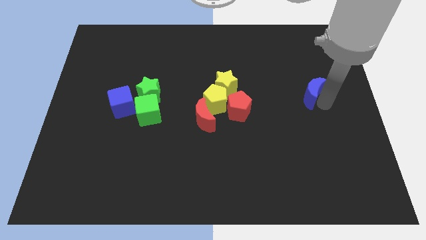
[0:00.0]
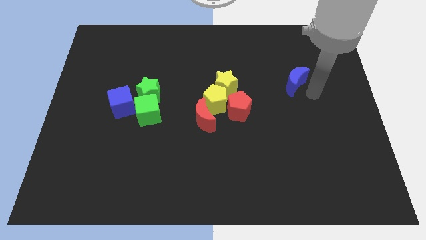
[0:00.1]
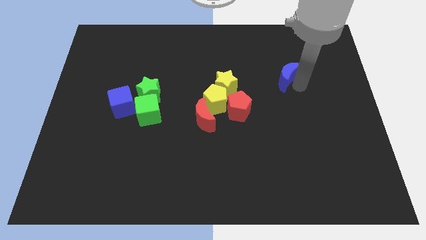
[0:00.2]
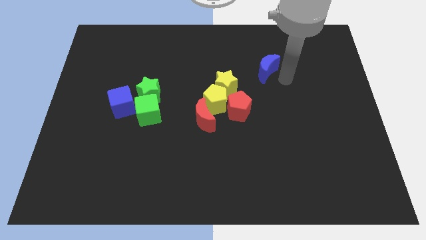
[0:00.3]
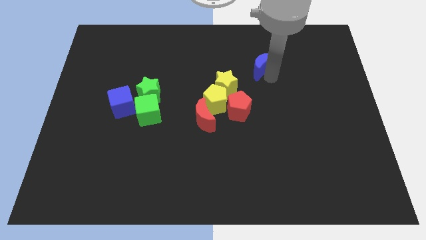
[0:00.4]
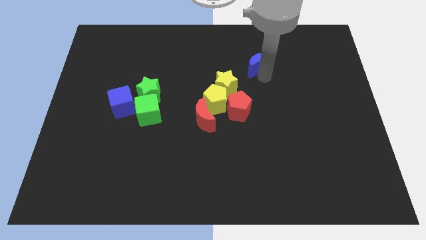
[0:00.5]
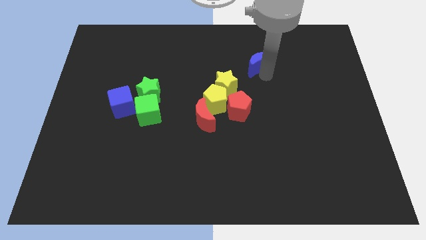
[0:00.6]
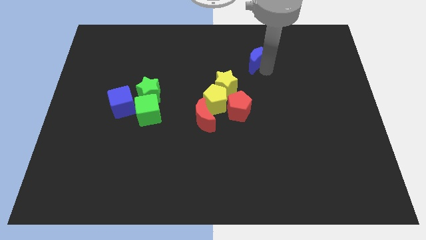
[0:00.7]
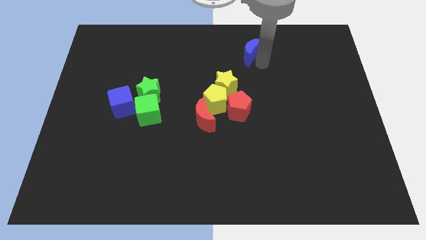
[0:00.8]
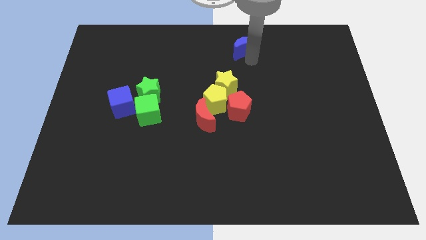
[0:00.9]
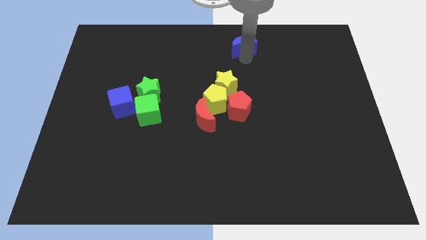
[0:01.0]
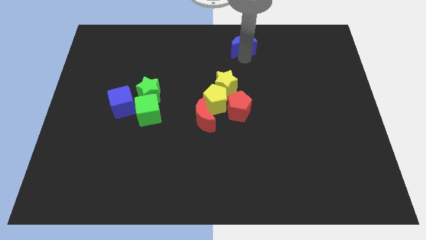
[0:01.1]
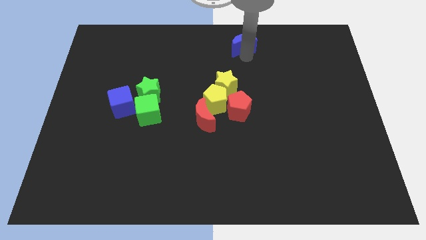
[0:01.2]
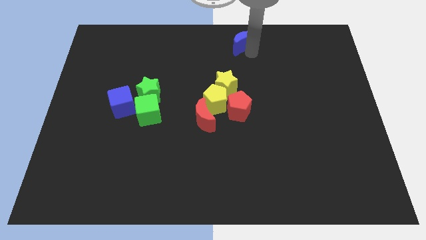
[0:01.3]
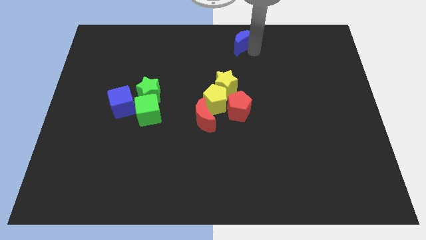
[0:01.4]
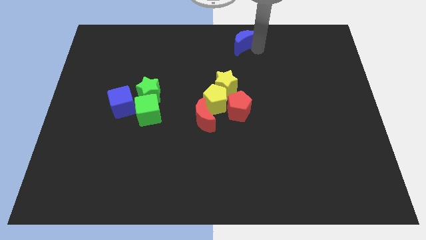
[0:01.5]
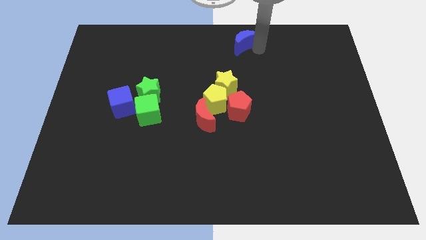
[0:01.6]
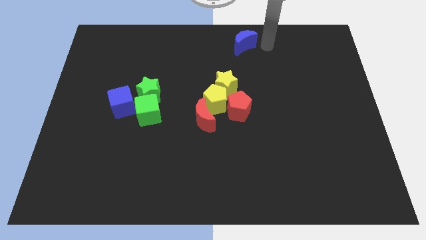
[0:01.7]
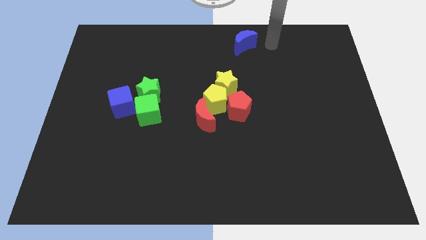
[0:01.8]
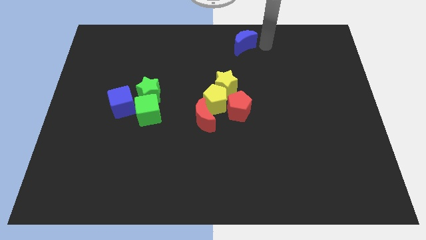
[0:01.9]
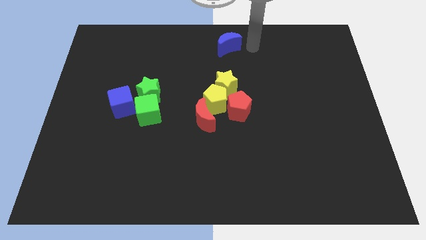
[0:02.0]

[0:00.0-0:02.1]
push the blue crescent to the top of the yellow star

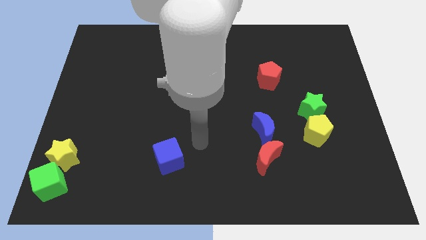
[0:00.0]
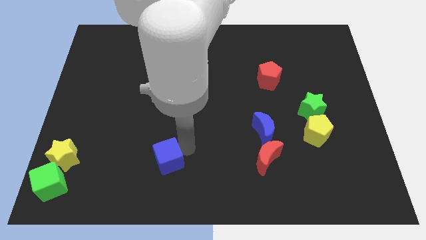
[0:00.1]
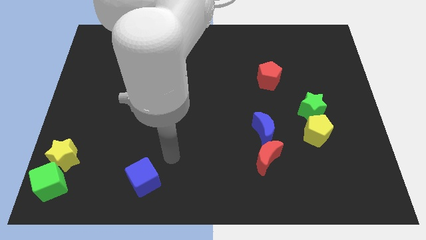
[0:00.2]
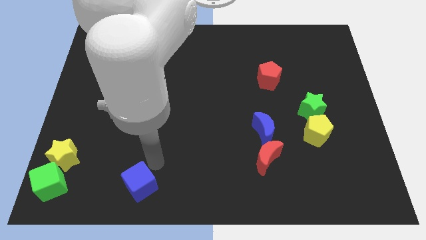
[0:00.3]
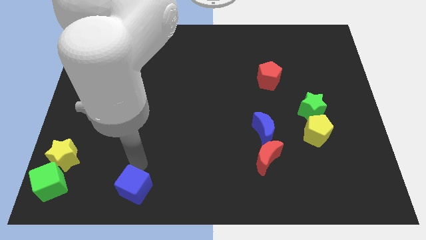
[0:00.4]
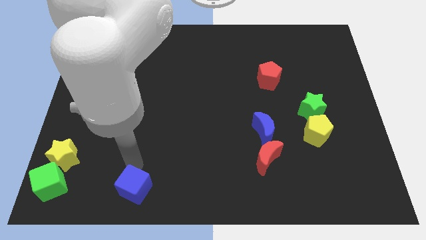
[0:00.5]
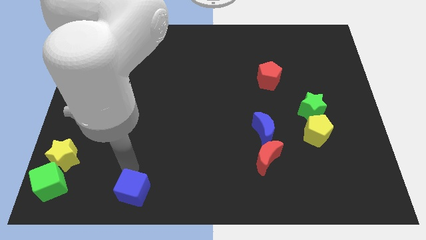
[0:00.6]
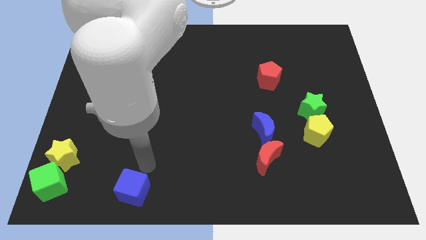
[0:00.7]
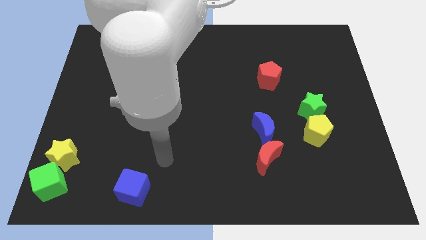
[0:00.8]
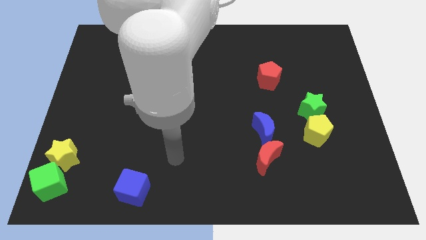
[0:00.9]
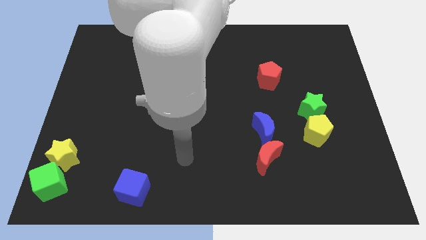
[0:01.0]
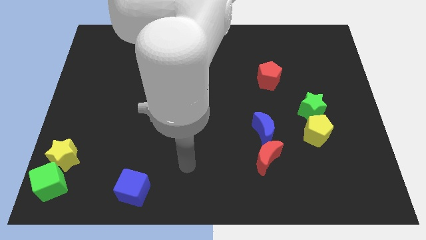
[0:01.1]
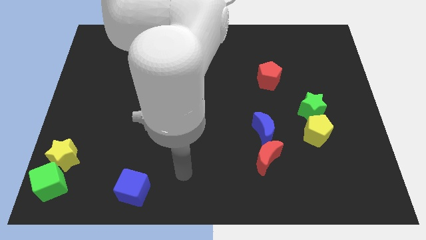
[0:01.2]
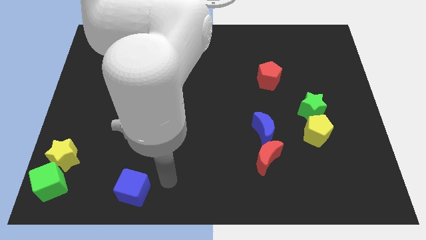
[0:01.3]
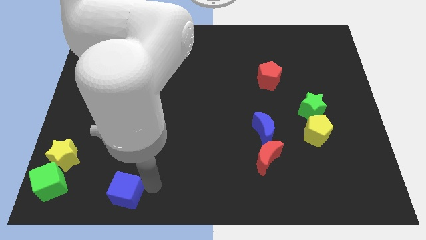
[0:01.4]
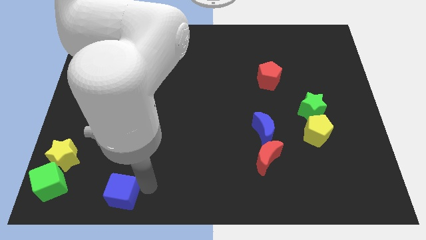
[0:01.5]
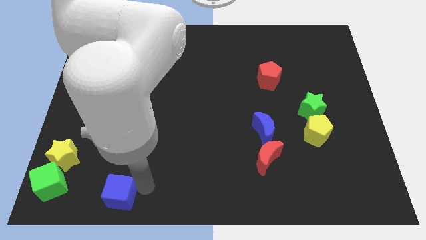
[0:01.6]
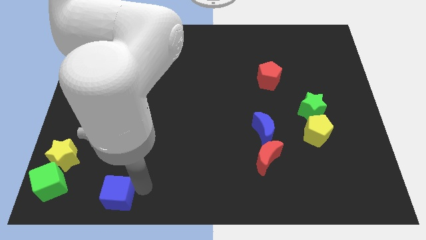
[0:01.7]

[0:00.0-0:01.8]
move blue cube to the right of green cube

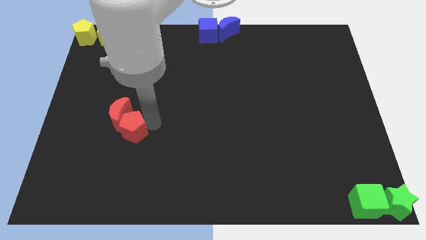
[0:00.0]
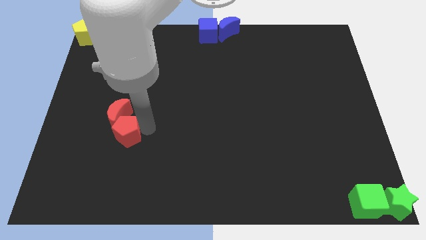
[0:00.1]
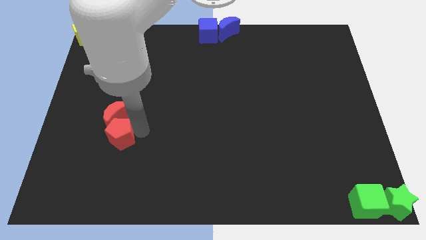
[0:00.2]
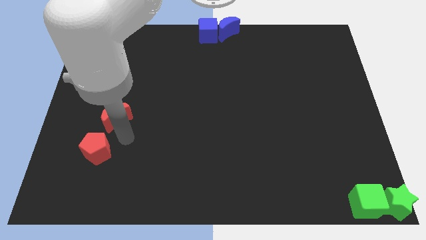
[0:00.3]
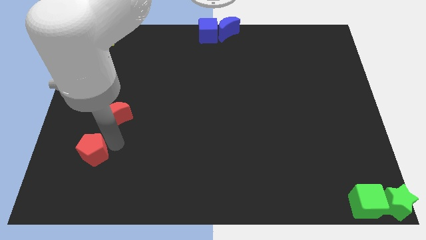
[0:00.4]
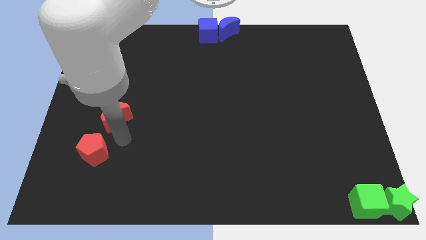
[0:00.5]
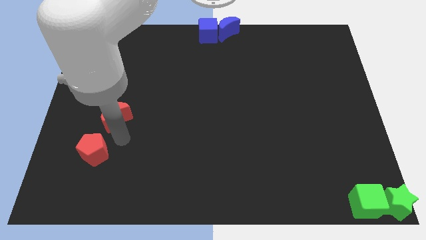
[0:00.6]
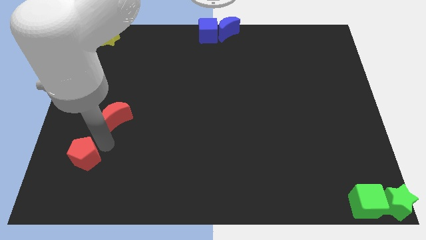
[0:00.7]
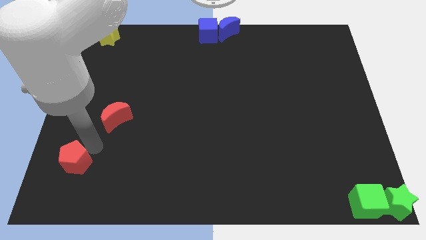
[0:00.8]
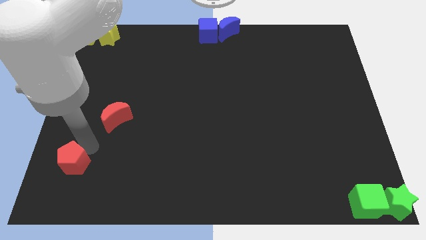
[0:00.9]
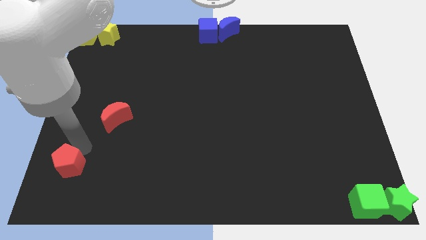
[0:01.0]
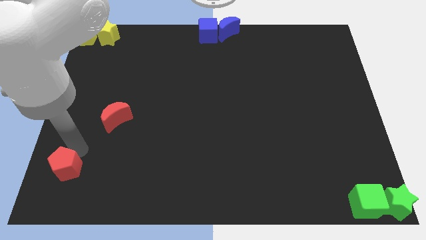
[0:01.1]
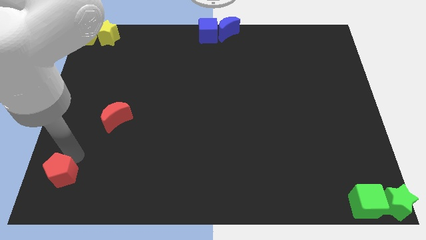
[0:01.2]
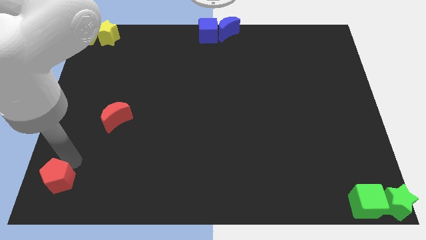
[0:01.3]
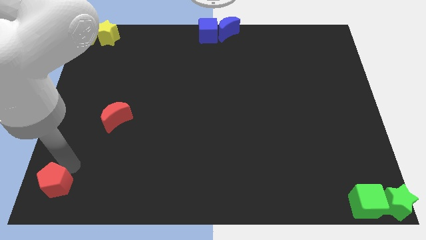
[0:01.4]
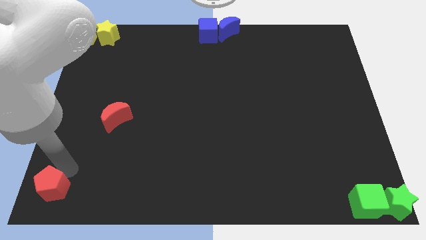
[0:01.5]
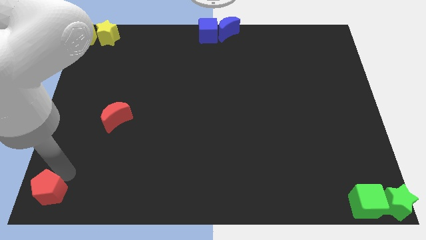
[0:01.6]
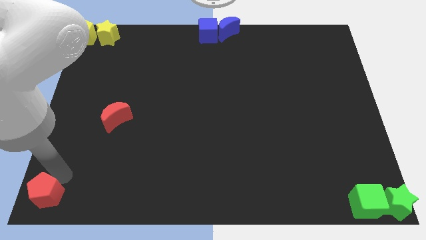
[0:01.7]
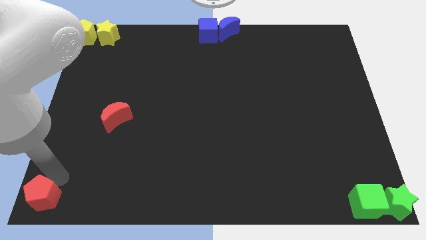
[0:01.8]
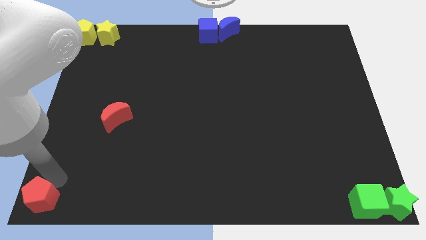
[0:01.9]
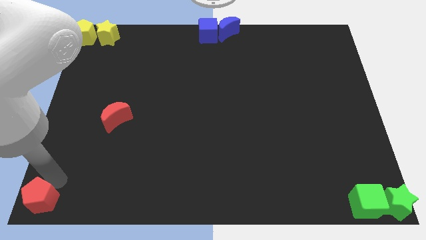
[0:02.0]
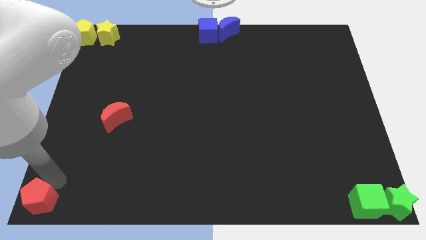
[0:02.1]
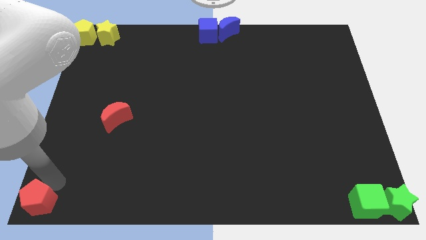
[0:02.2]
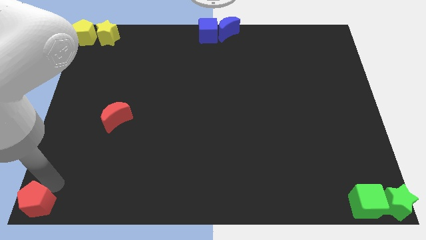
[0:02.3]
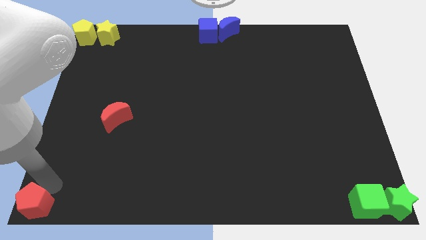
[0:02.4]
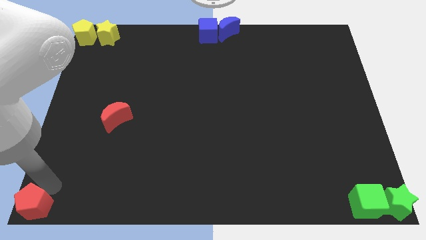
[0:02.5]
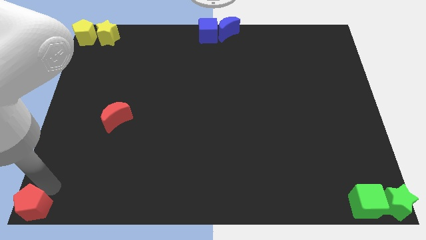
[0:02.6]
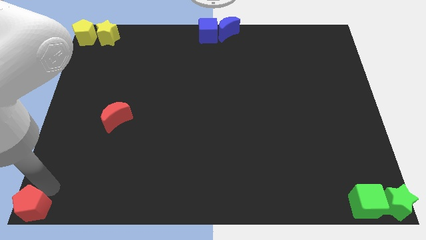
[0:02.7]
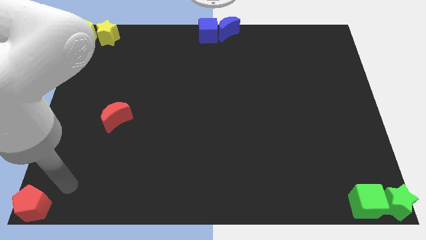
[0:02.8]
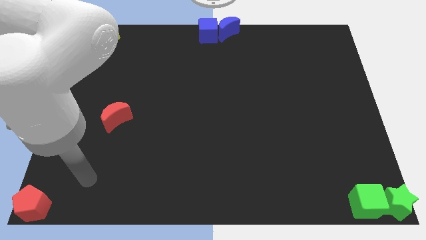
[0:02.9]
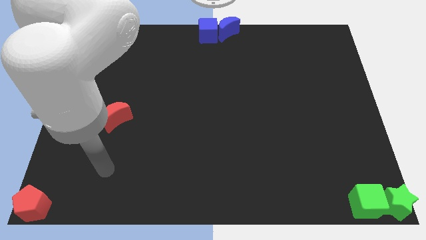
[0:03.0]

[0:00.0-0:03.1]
move the red pentagon to the bottom left corner

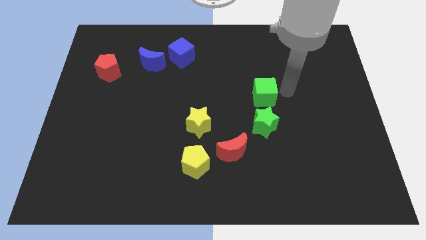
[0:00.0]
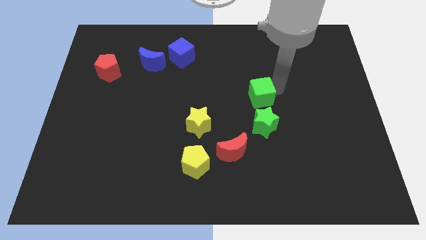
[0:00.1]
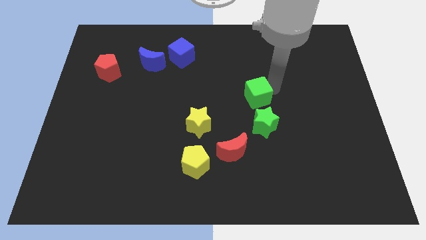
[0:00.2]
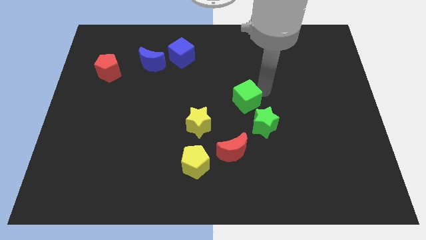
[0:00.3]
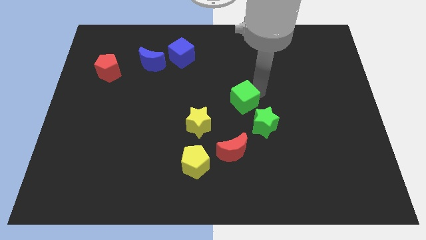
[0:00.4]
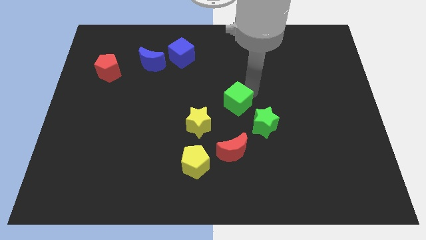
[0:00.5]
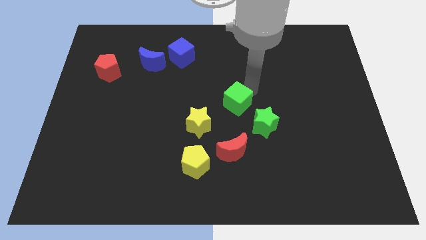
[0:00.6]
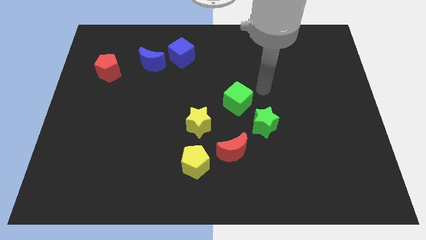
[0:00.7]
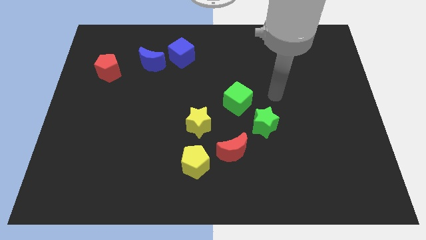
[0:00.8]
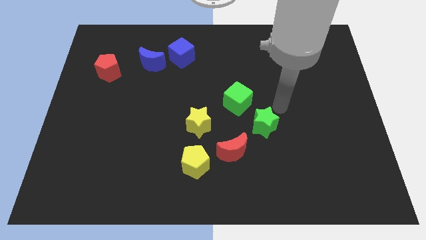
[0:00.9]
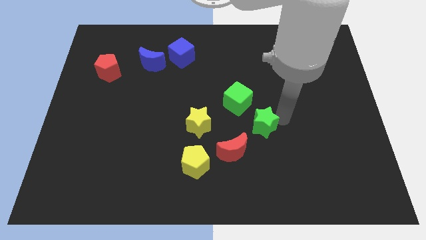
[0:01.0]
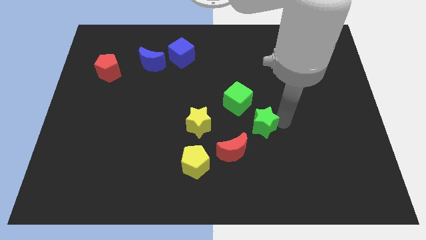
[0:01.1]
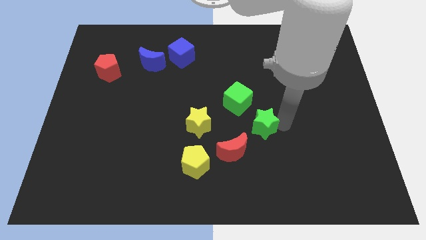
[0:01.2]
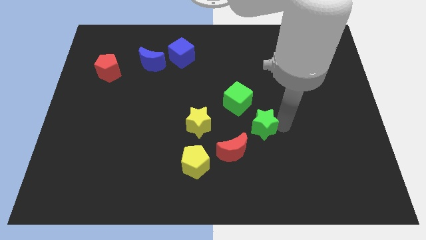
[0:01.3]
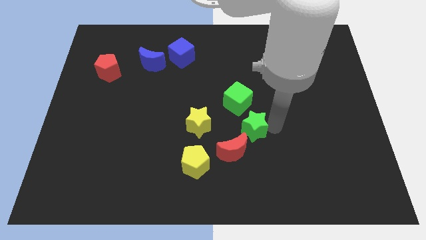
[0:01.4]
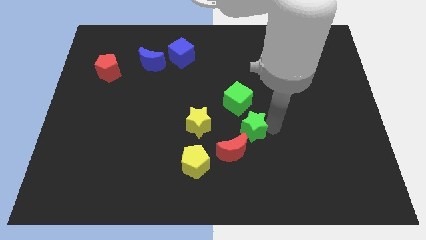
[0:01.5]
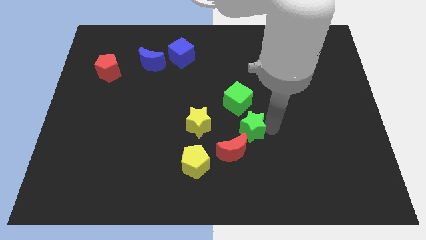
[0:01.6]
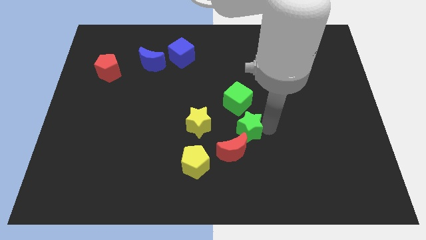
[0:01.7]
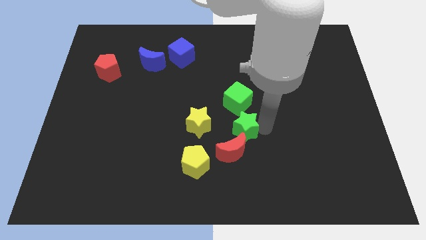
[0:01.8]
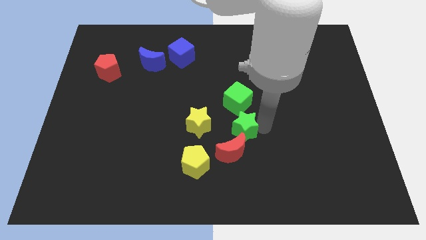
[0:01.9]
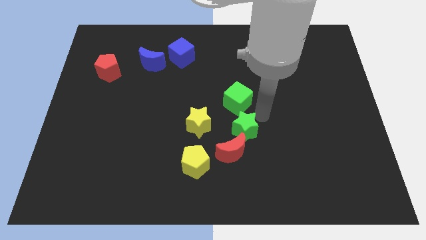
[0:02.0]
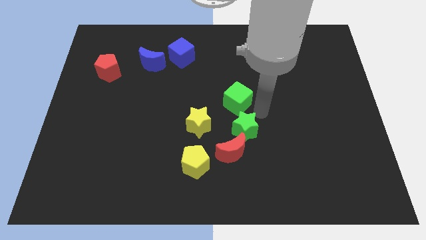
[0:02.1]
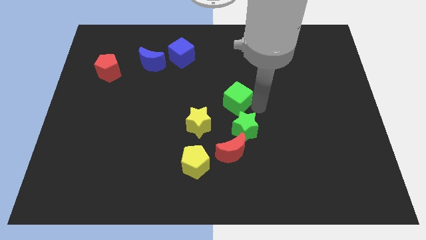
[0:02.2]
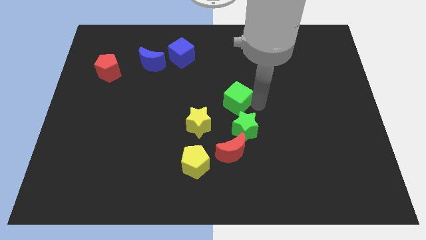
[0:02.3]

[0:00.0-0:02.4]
move the green star down to the green cube
